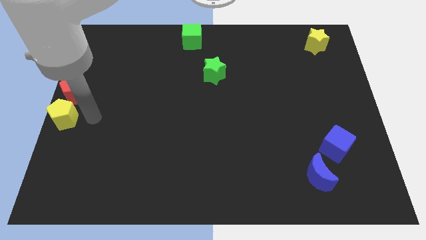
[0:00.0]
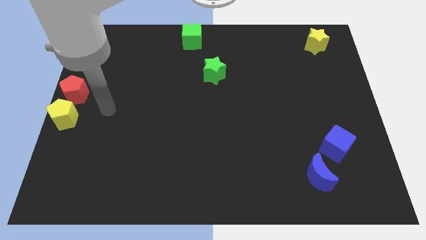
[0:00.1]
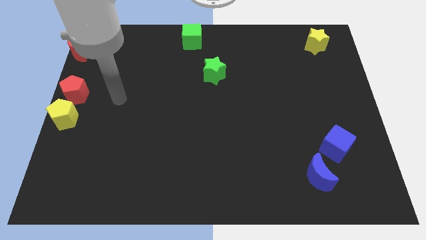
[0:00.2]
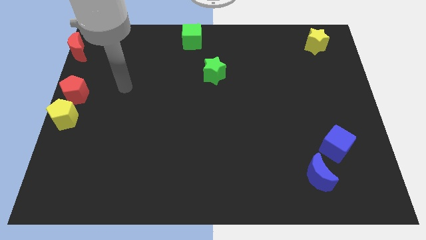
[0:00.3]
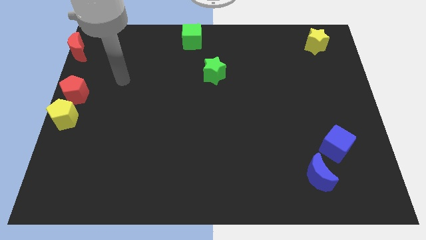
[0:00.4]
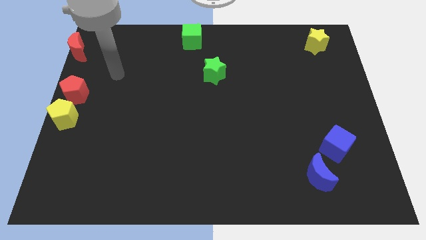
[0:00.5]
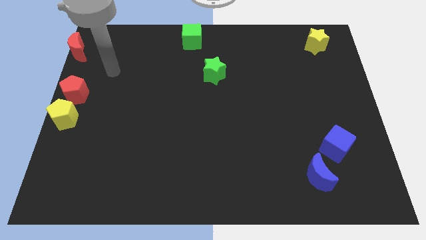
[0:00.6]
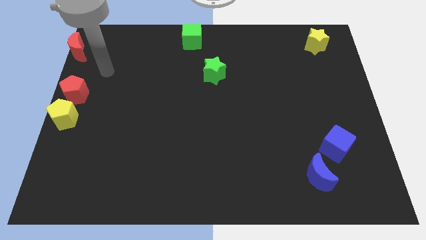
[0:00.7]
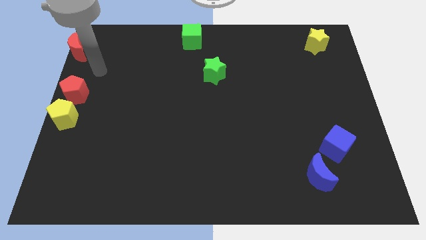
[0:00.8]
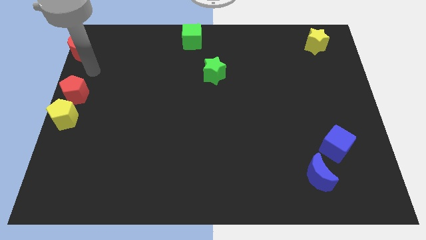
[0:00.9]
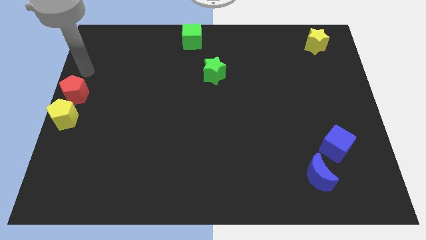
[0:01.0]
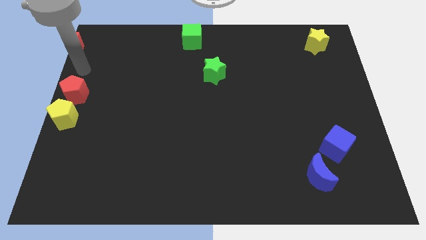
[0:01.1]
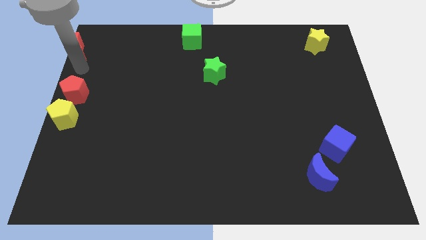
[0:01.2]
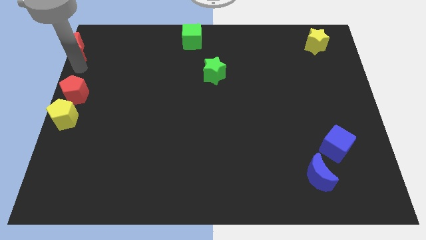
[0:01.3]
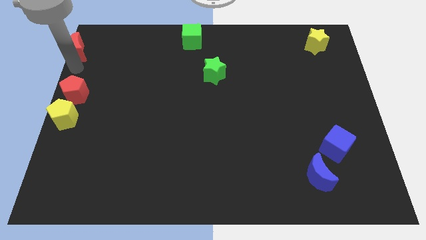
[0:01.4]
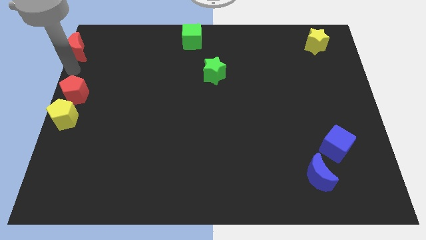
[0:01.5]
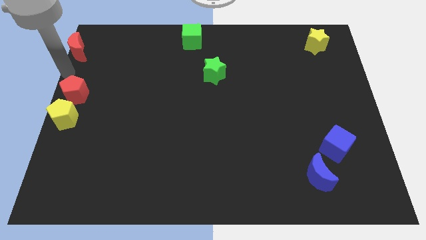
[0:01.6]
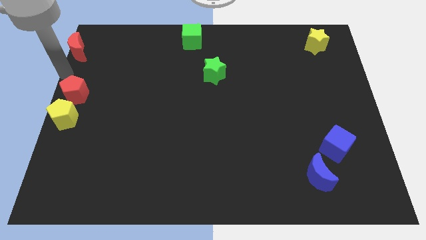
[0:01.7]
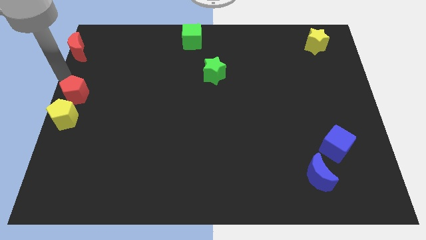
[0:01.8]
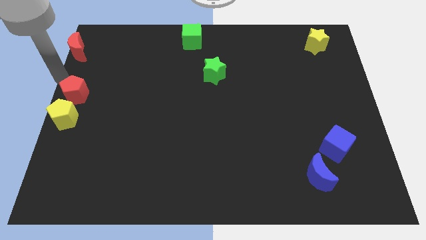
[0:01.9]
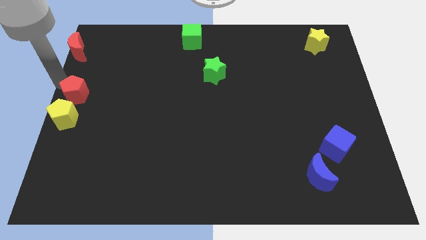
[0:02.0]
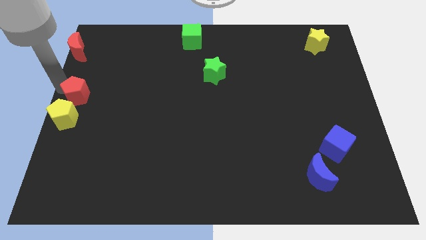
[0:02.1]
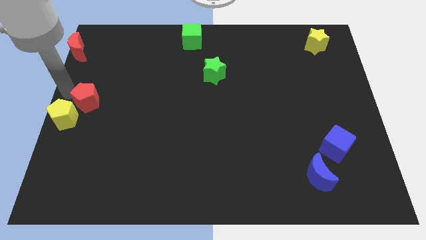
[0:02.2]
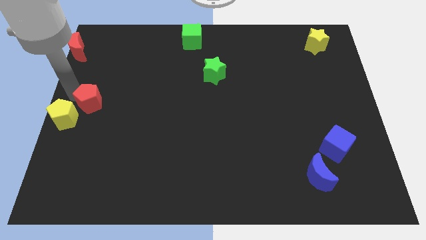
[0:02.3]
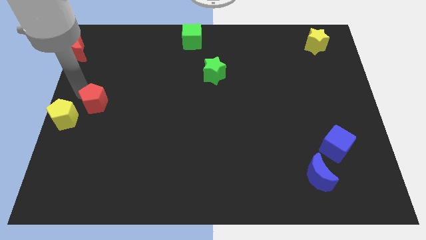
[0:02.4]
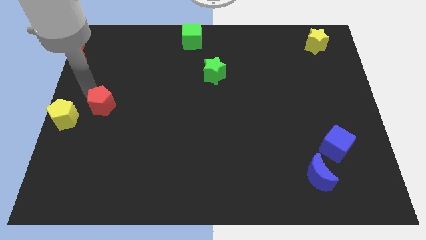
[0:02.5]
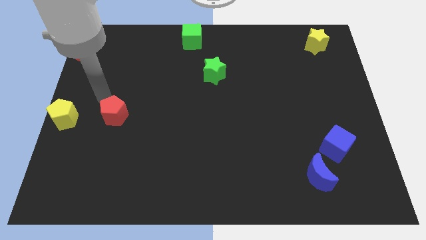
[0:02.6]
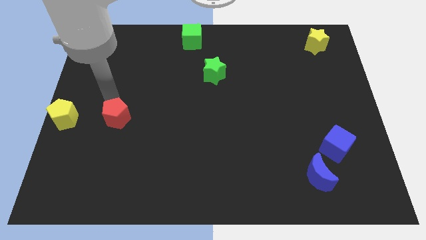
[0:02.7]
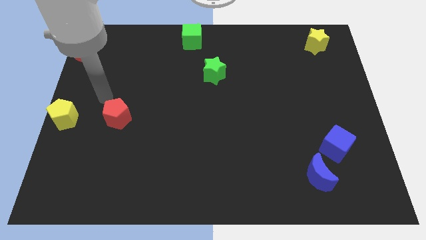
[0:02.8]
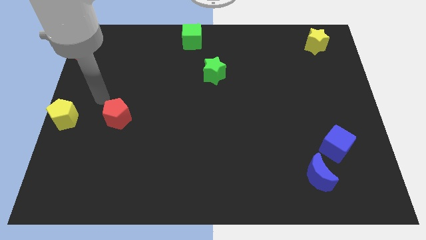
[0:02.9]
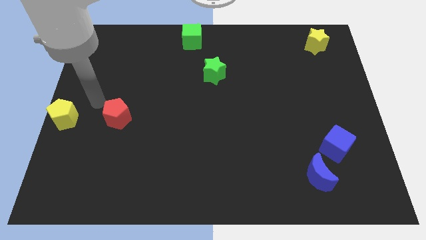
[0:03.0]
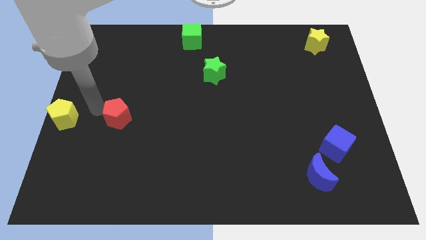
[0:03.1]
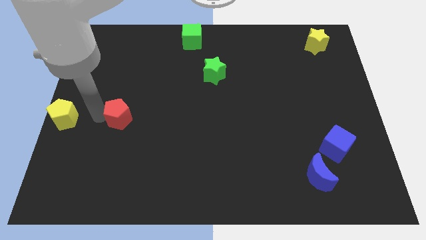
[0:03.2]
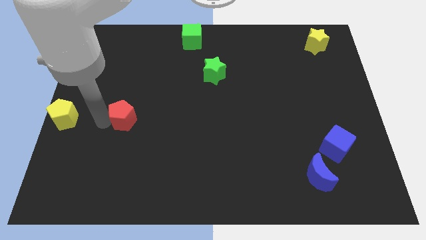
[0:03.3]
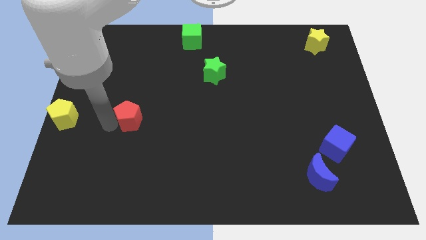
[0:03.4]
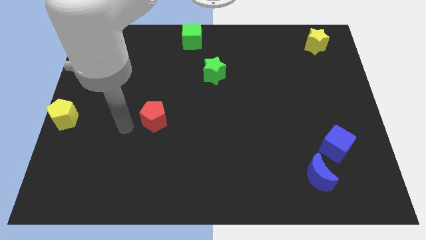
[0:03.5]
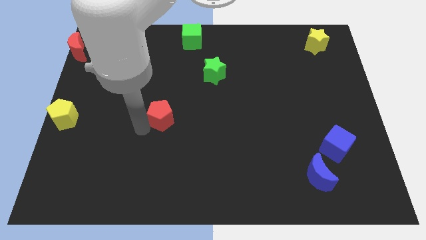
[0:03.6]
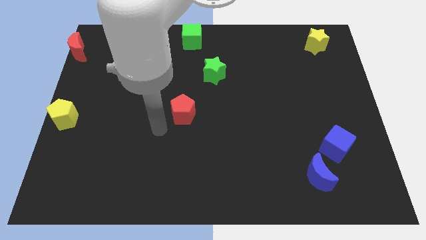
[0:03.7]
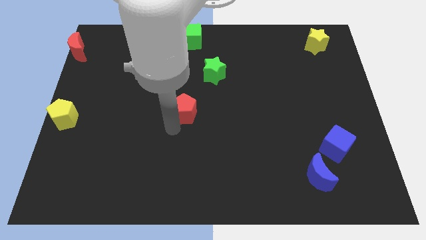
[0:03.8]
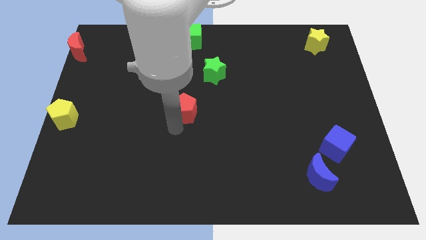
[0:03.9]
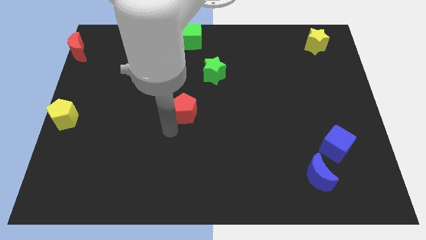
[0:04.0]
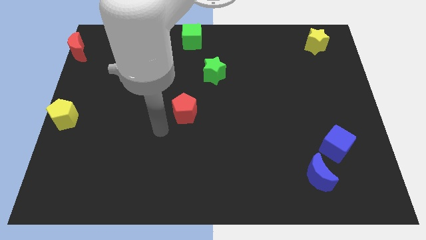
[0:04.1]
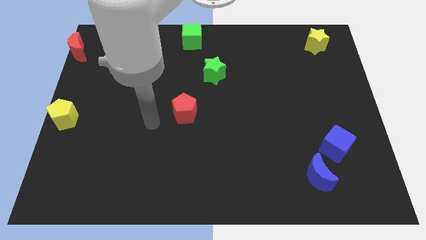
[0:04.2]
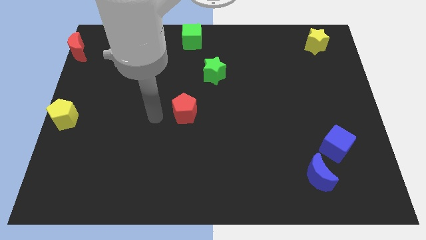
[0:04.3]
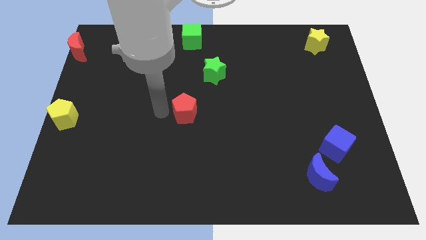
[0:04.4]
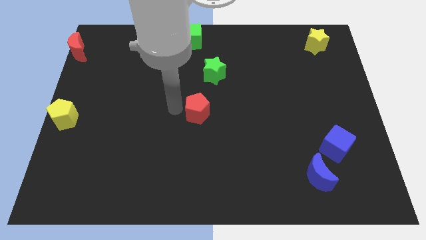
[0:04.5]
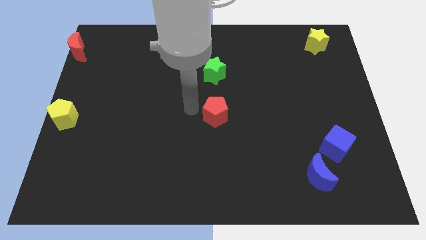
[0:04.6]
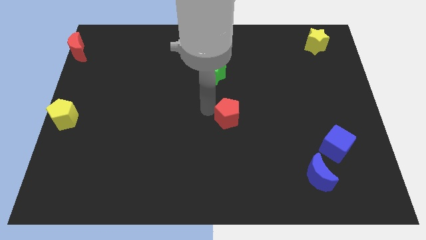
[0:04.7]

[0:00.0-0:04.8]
move the red pentagon to the center of the board

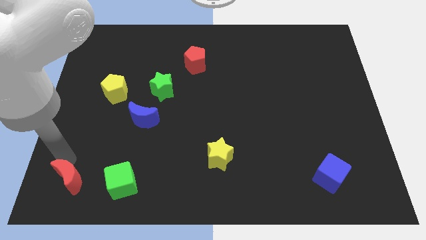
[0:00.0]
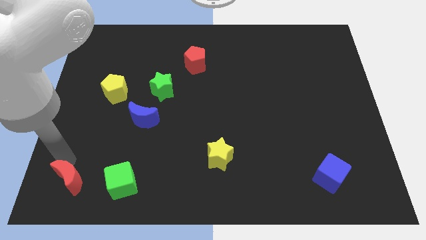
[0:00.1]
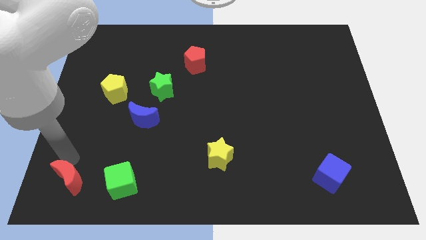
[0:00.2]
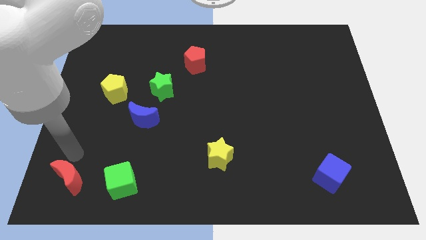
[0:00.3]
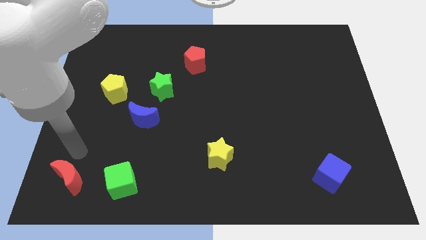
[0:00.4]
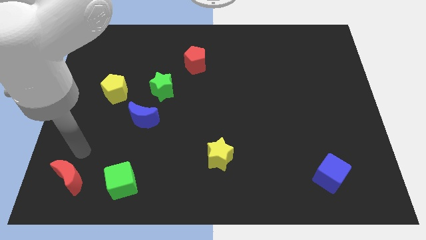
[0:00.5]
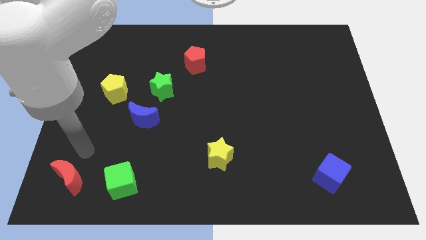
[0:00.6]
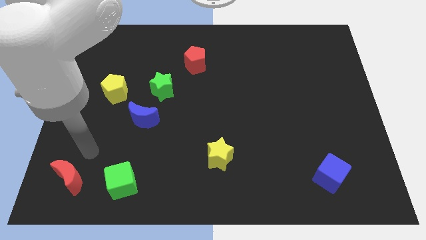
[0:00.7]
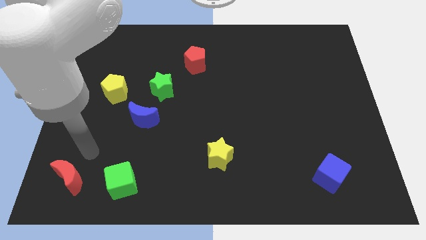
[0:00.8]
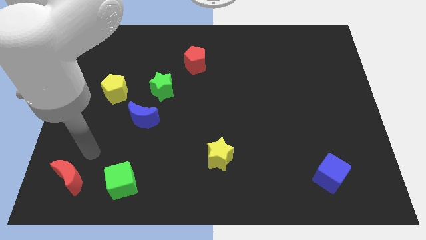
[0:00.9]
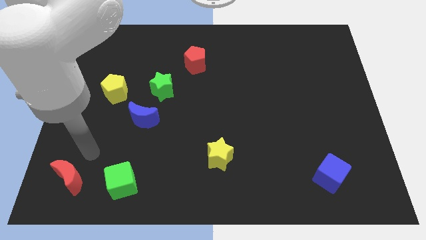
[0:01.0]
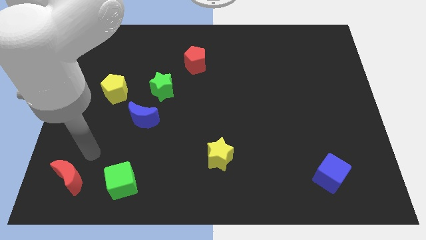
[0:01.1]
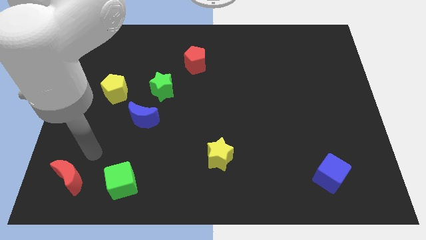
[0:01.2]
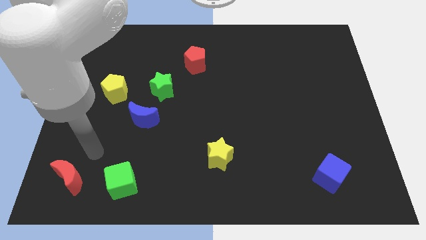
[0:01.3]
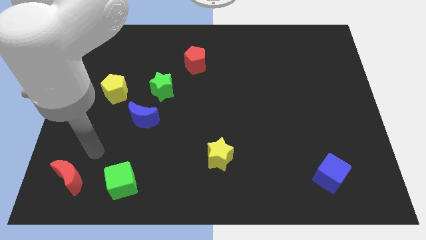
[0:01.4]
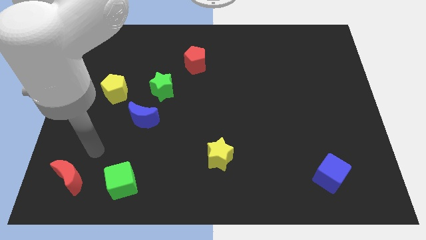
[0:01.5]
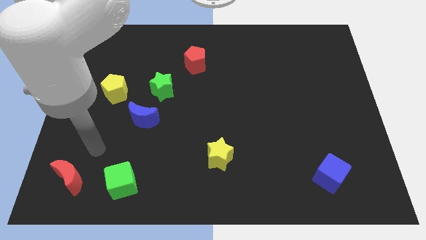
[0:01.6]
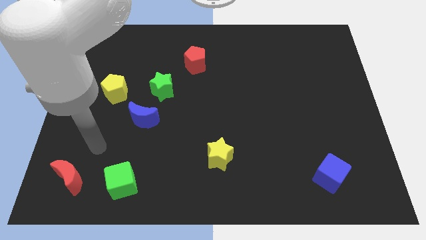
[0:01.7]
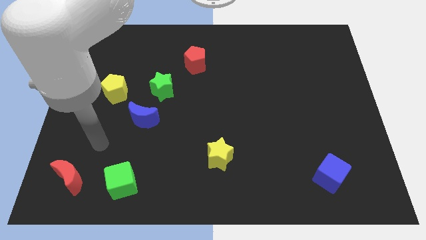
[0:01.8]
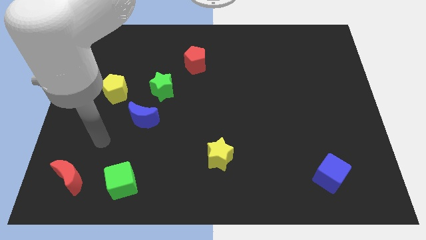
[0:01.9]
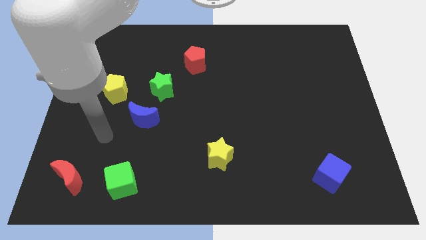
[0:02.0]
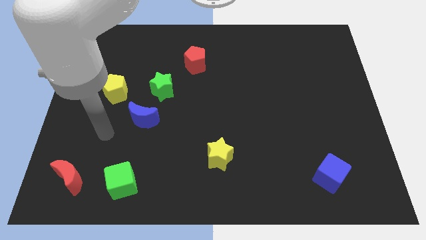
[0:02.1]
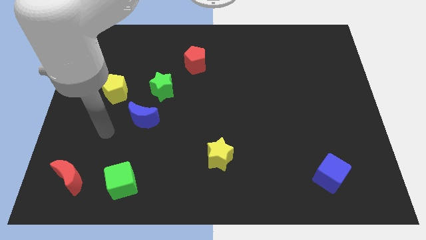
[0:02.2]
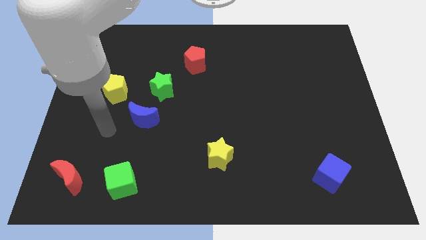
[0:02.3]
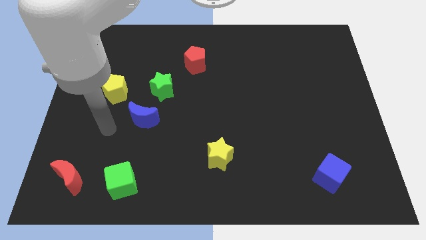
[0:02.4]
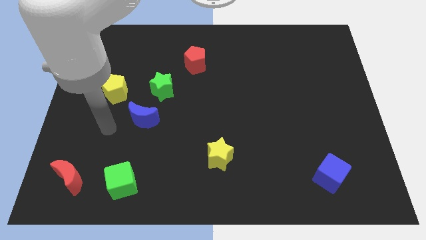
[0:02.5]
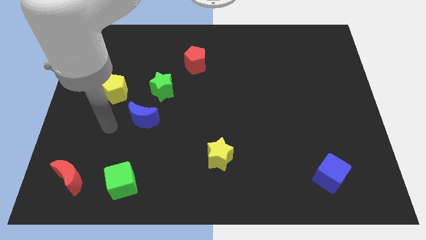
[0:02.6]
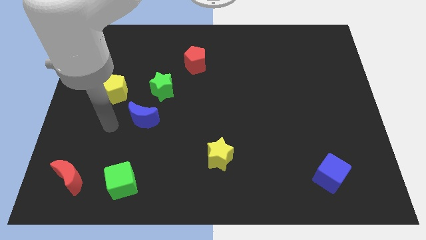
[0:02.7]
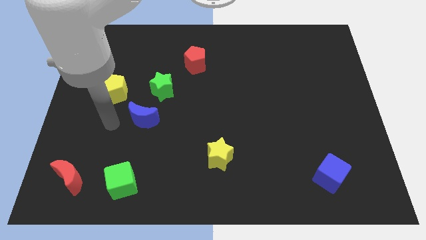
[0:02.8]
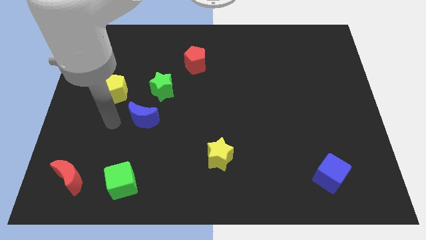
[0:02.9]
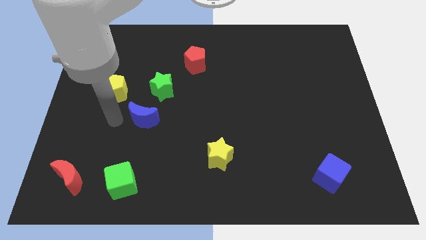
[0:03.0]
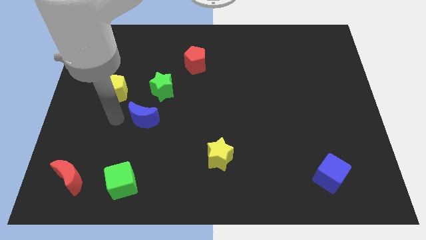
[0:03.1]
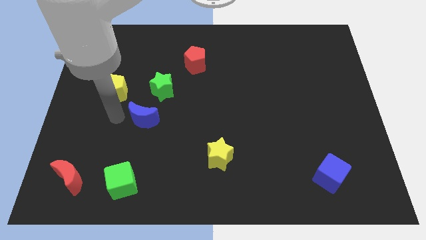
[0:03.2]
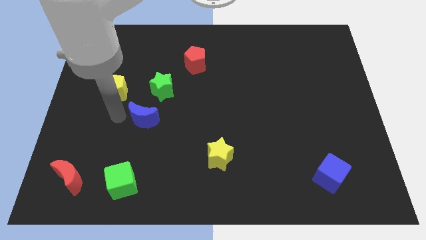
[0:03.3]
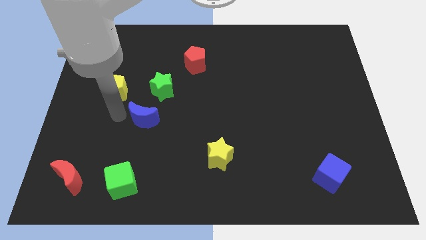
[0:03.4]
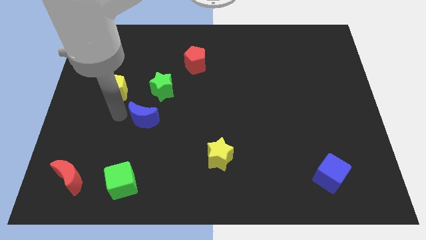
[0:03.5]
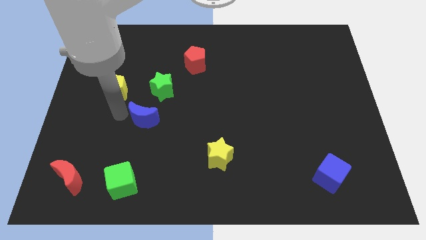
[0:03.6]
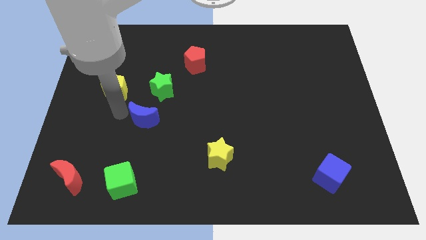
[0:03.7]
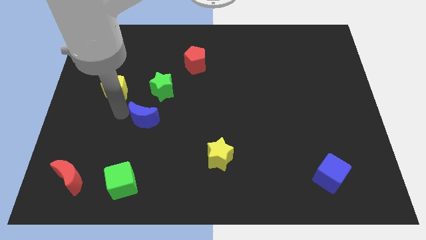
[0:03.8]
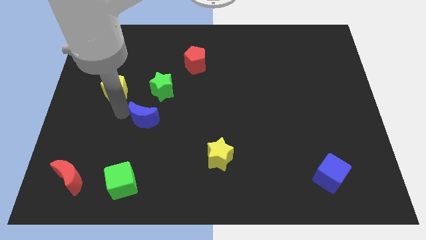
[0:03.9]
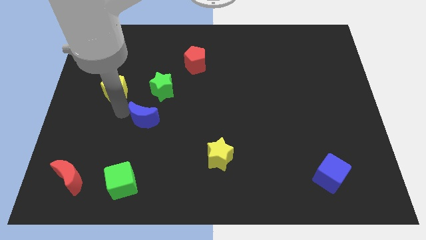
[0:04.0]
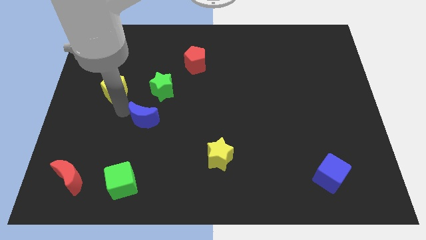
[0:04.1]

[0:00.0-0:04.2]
move your arm away from the red moon
